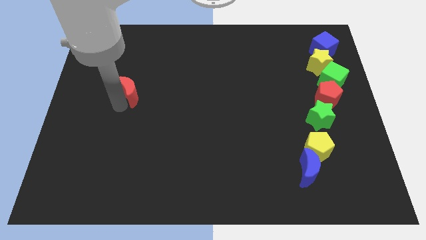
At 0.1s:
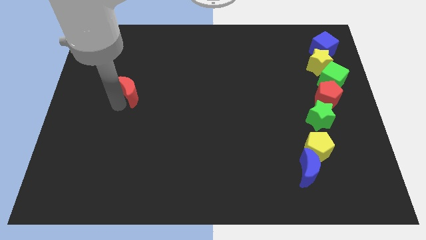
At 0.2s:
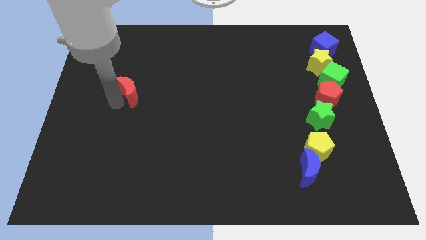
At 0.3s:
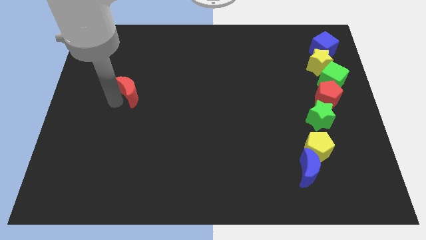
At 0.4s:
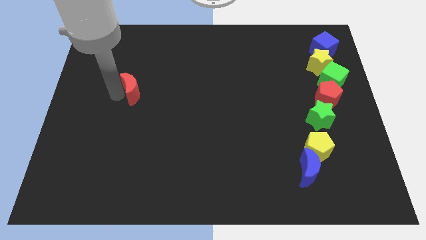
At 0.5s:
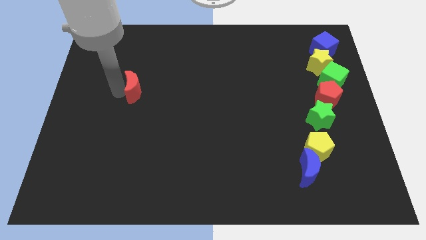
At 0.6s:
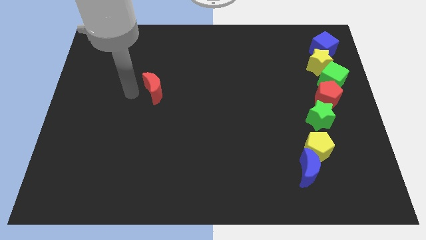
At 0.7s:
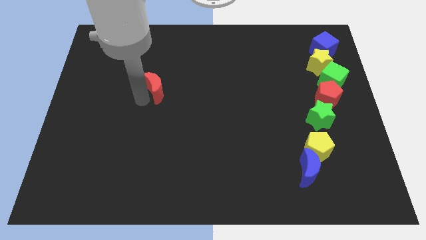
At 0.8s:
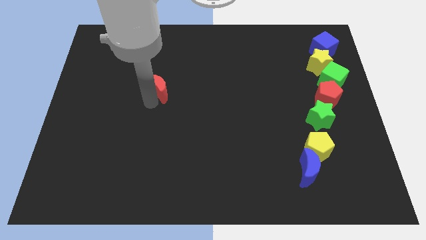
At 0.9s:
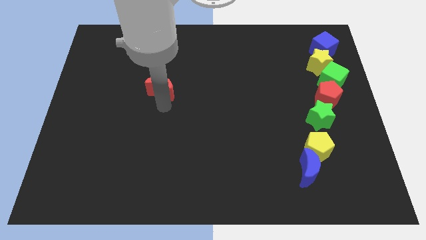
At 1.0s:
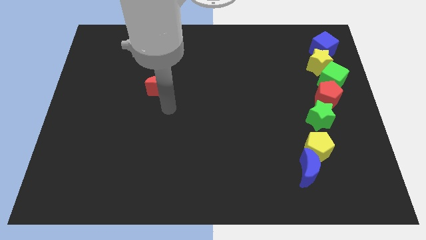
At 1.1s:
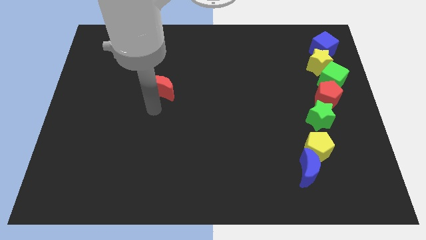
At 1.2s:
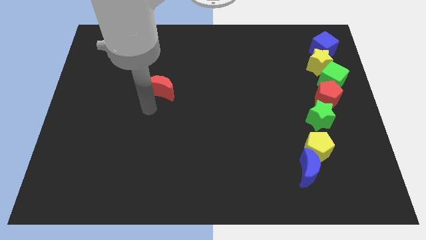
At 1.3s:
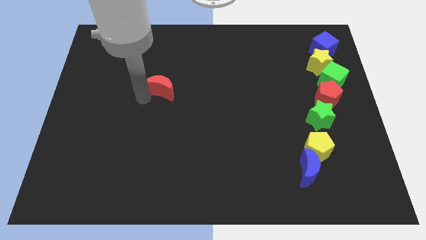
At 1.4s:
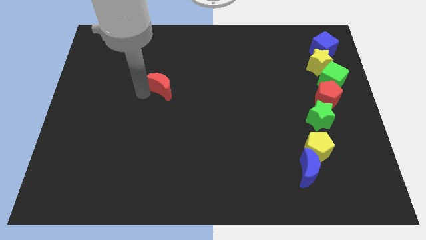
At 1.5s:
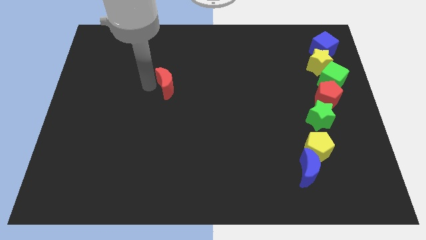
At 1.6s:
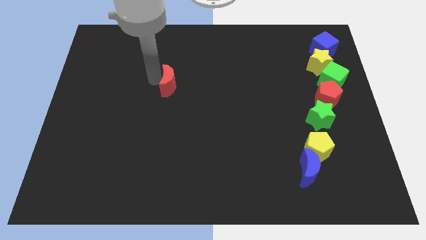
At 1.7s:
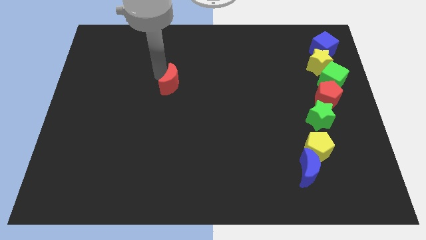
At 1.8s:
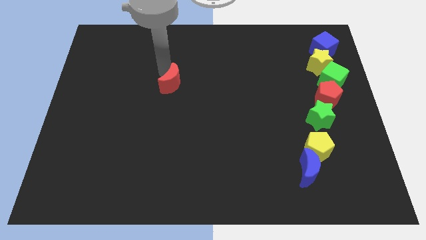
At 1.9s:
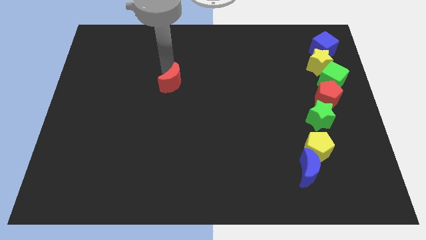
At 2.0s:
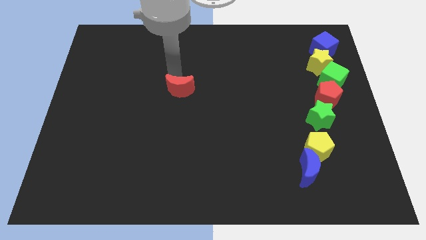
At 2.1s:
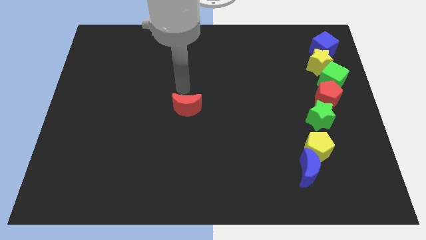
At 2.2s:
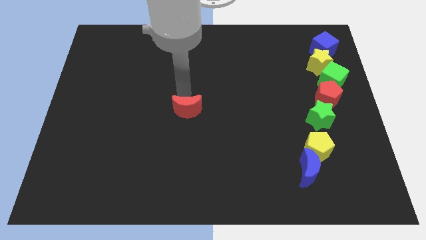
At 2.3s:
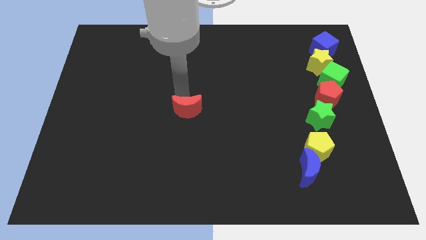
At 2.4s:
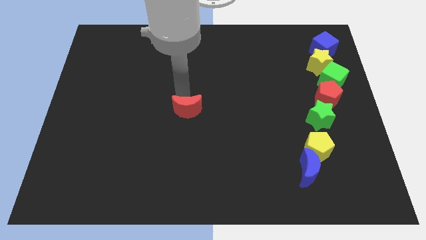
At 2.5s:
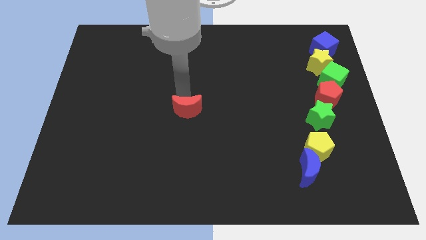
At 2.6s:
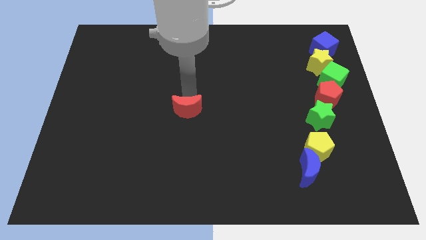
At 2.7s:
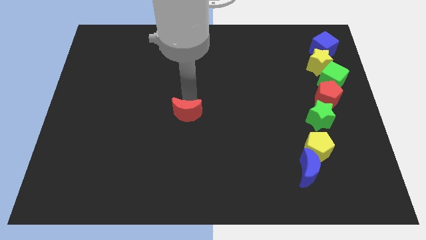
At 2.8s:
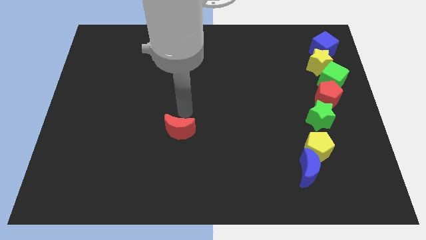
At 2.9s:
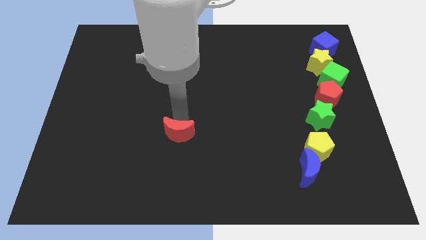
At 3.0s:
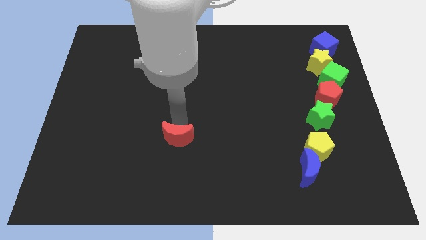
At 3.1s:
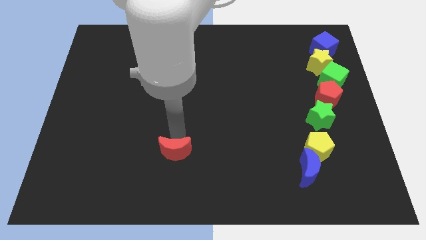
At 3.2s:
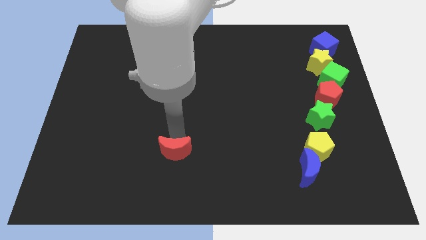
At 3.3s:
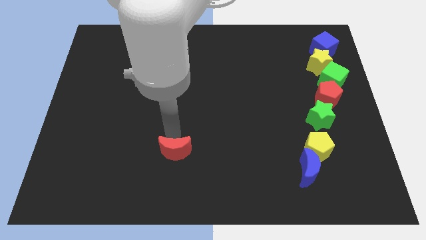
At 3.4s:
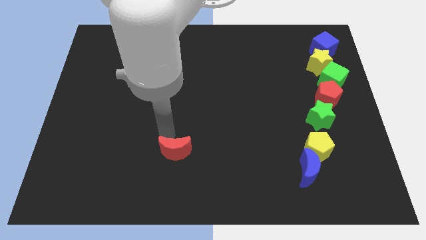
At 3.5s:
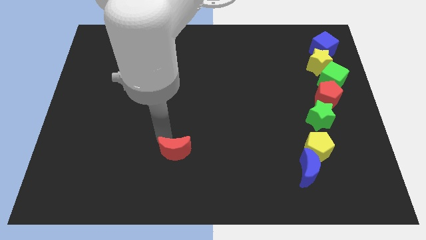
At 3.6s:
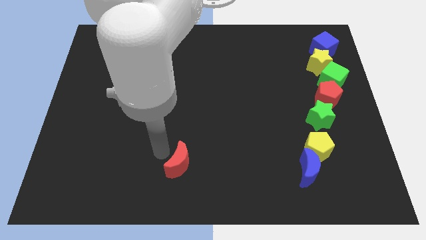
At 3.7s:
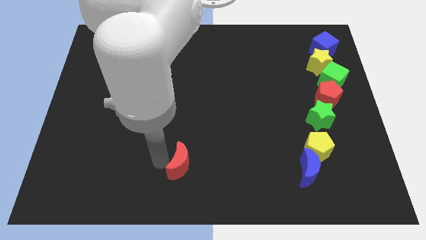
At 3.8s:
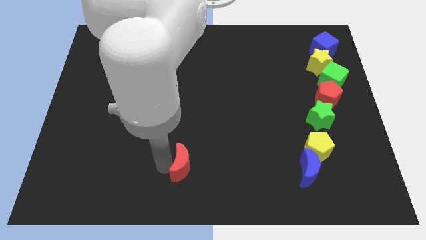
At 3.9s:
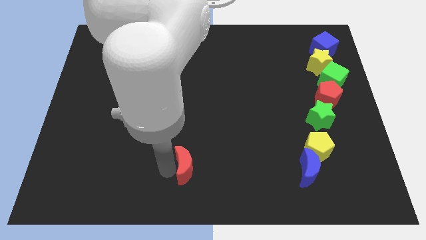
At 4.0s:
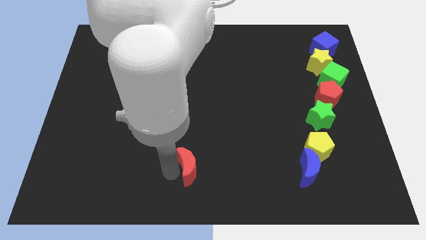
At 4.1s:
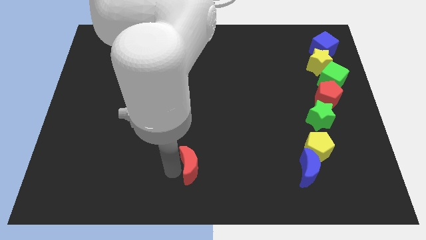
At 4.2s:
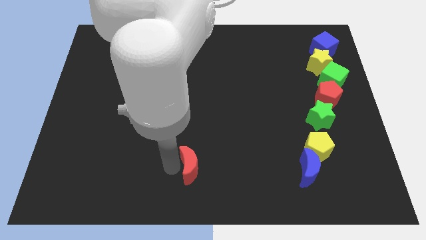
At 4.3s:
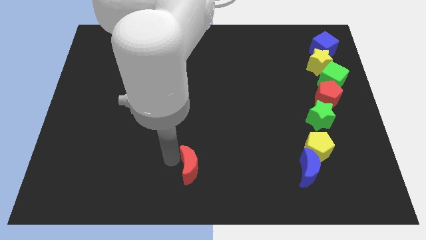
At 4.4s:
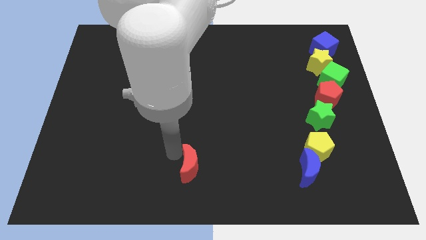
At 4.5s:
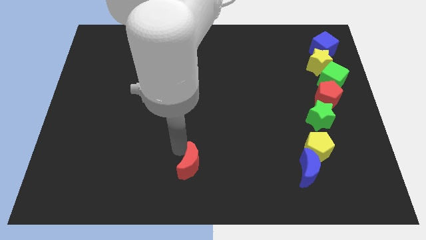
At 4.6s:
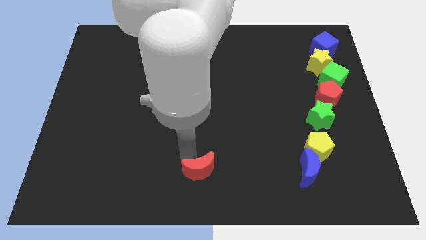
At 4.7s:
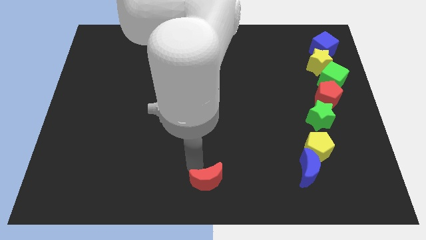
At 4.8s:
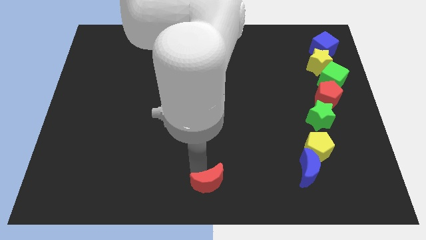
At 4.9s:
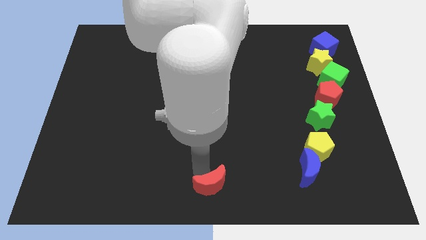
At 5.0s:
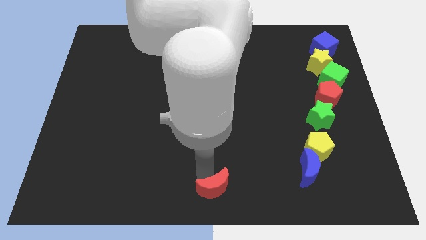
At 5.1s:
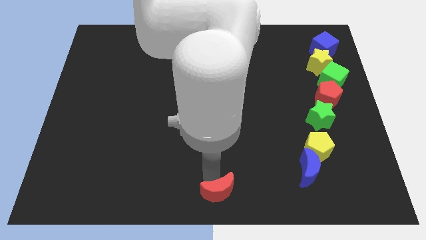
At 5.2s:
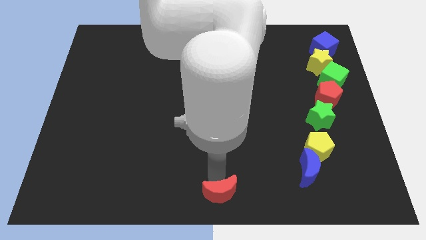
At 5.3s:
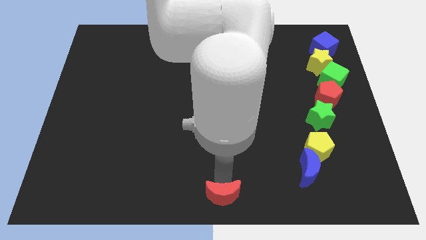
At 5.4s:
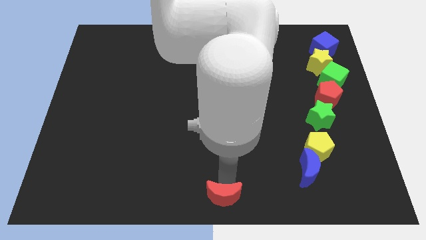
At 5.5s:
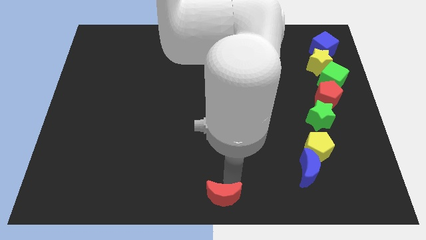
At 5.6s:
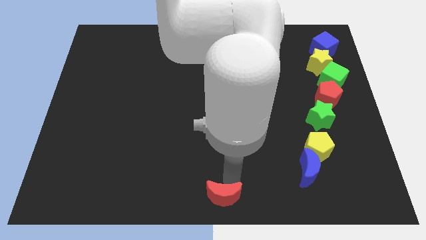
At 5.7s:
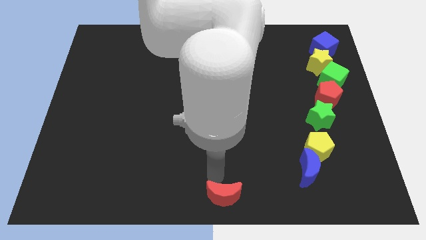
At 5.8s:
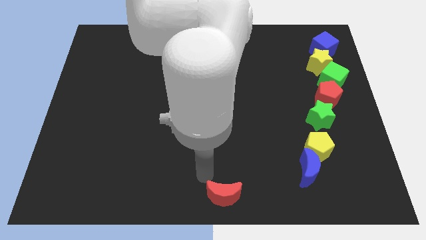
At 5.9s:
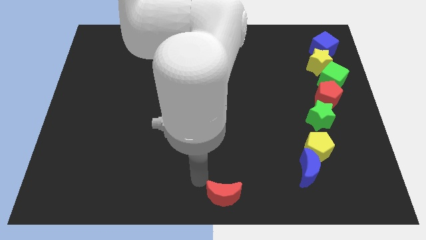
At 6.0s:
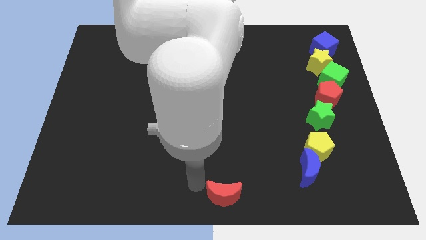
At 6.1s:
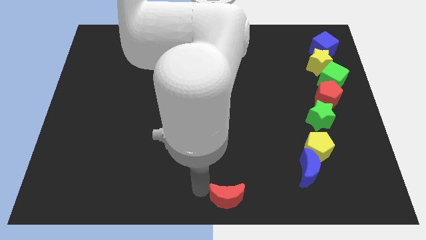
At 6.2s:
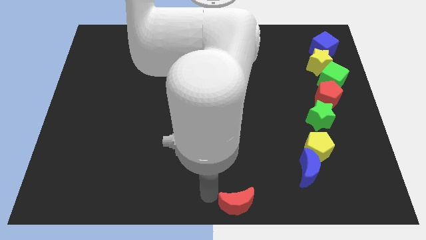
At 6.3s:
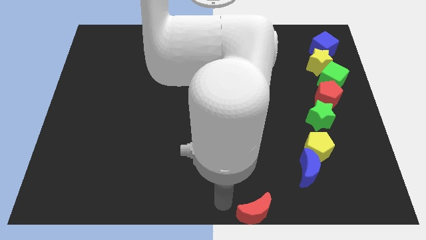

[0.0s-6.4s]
place the red moon at the bottom center of the board

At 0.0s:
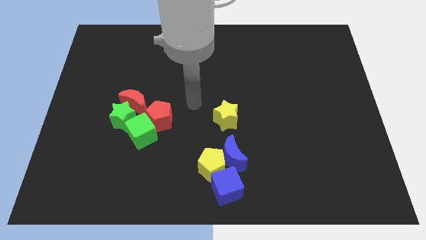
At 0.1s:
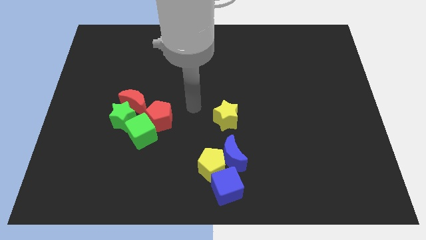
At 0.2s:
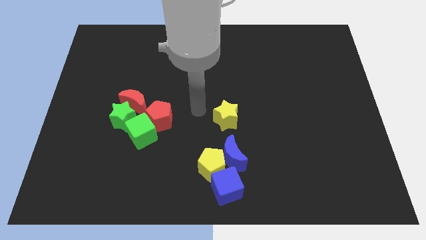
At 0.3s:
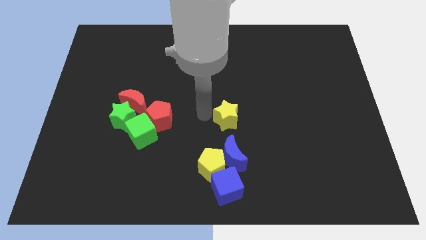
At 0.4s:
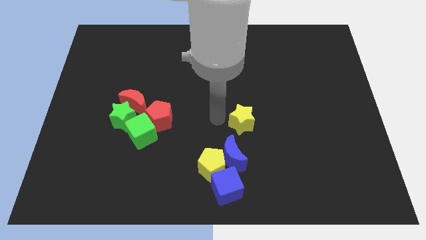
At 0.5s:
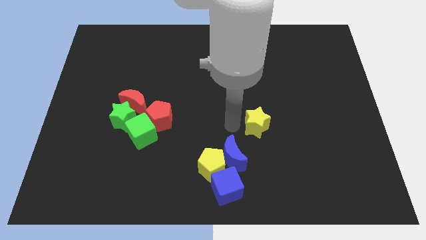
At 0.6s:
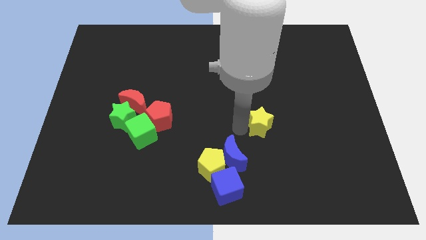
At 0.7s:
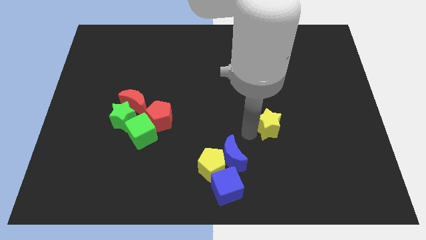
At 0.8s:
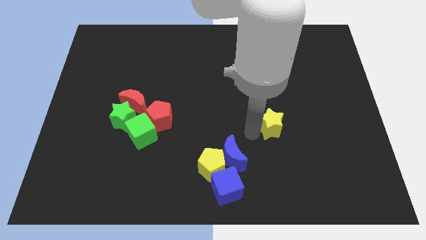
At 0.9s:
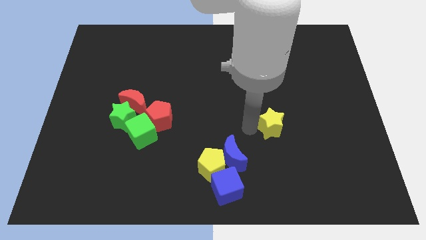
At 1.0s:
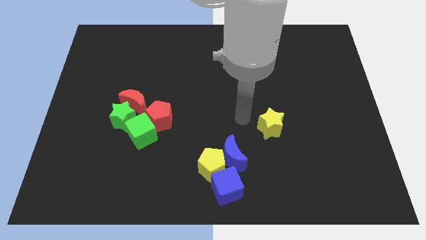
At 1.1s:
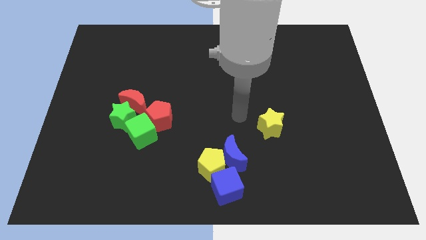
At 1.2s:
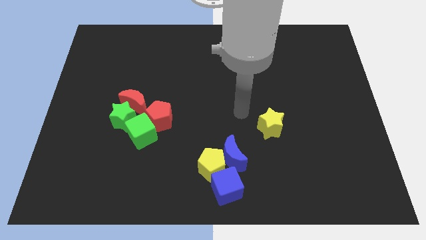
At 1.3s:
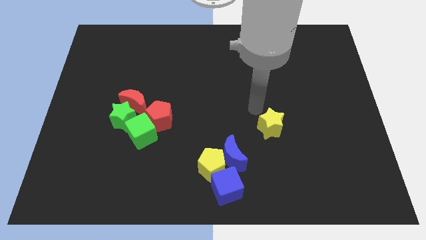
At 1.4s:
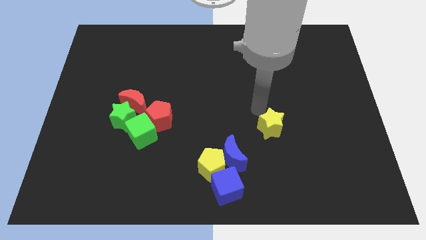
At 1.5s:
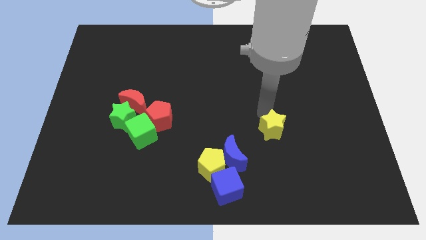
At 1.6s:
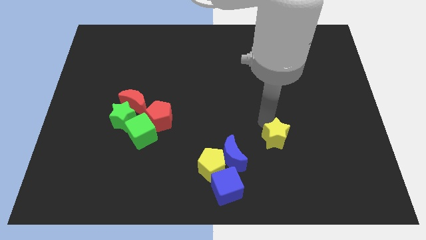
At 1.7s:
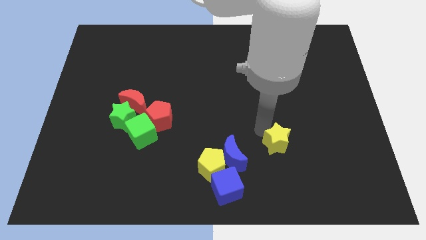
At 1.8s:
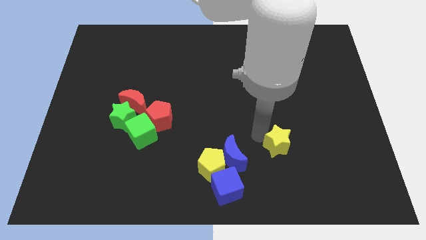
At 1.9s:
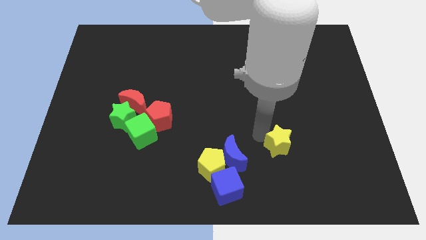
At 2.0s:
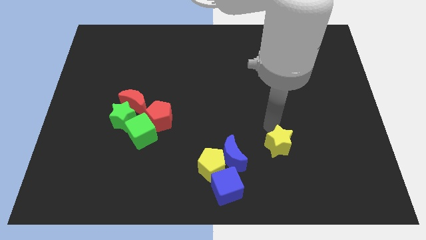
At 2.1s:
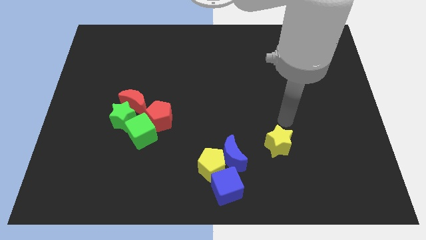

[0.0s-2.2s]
move the yellow star to the top right of the blue cube

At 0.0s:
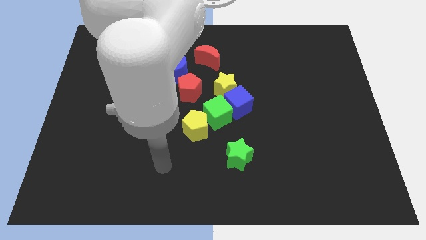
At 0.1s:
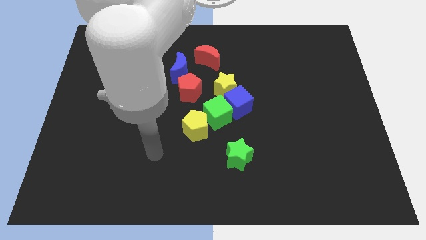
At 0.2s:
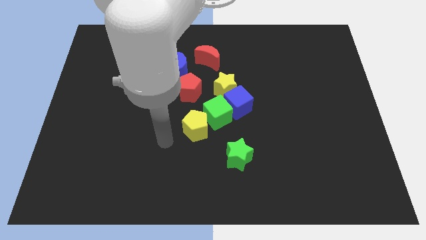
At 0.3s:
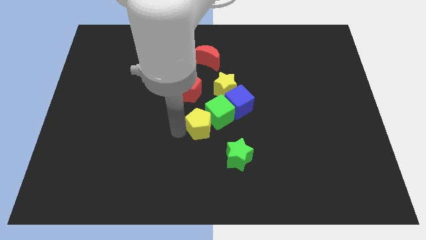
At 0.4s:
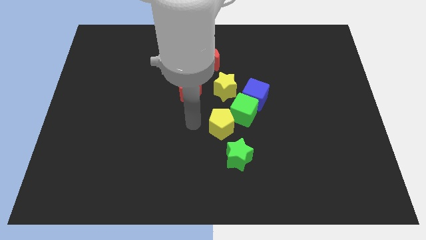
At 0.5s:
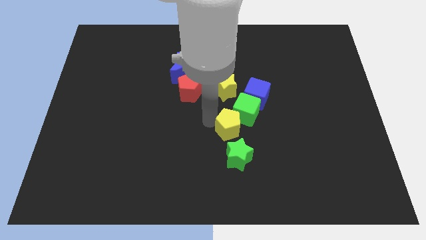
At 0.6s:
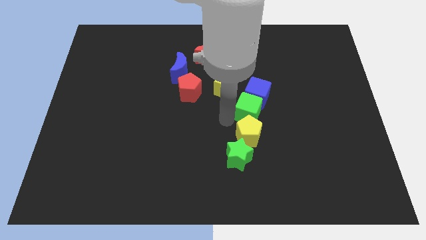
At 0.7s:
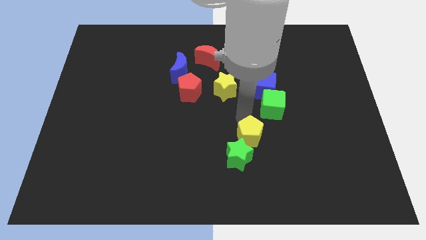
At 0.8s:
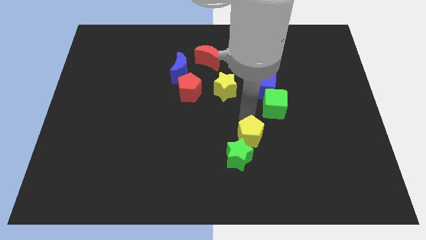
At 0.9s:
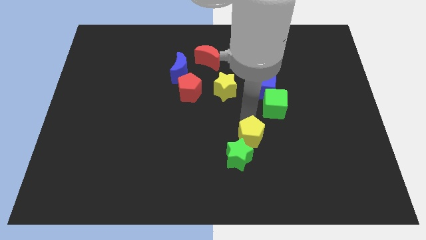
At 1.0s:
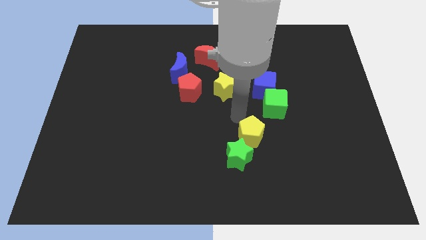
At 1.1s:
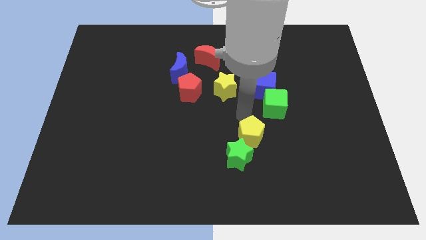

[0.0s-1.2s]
push the green cube slightly to the right
